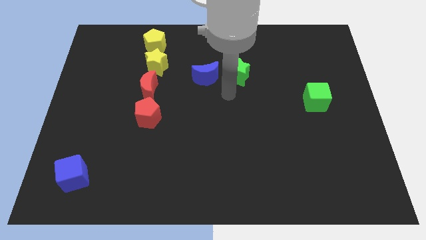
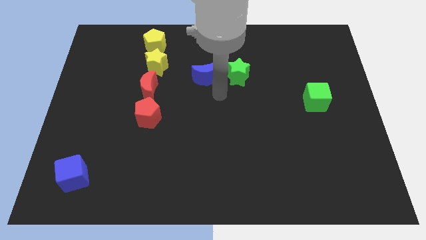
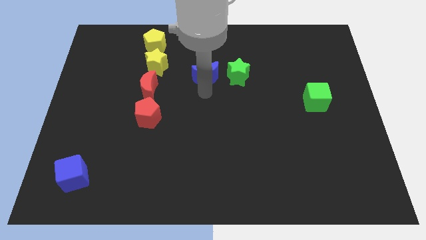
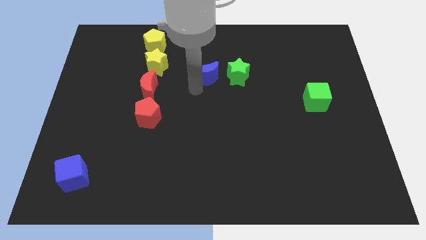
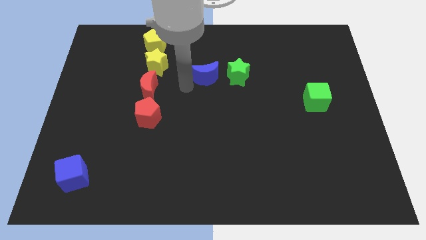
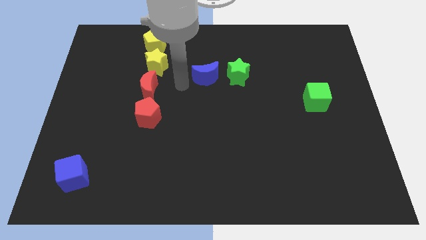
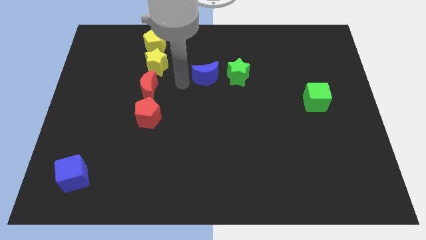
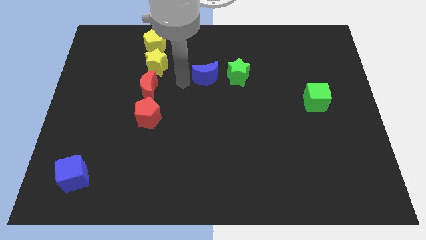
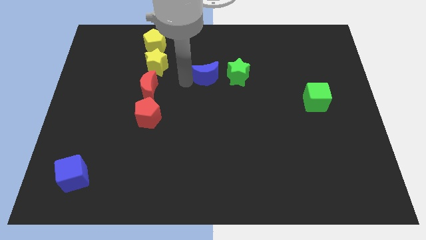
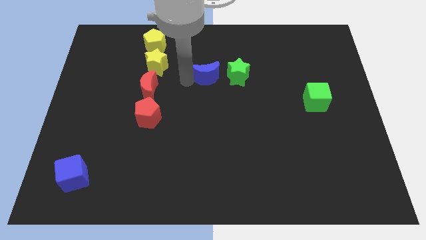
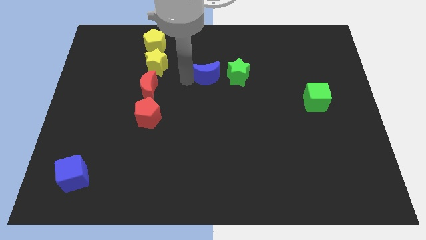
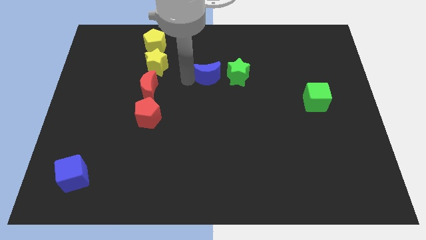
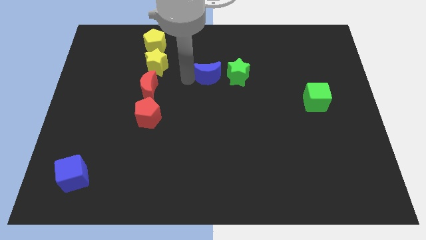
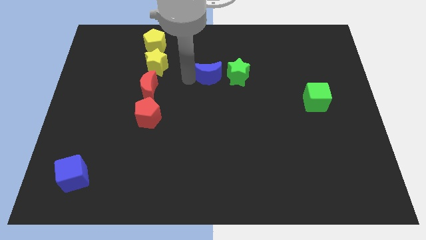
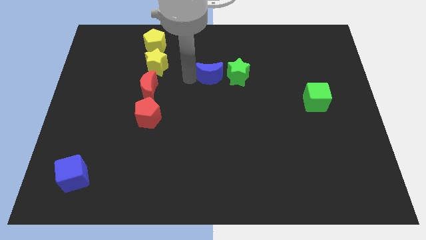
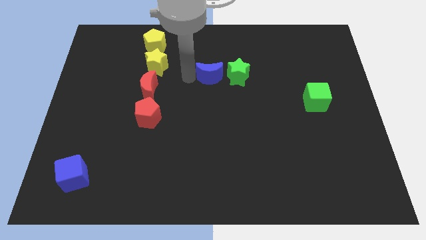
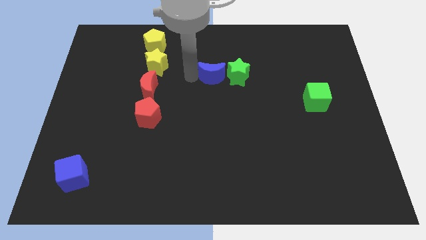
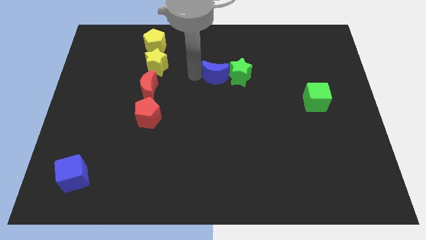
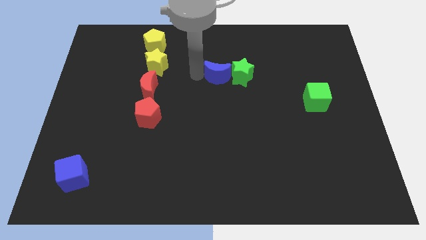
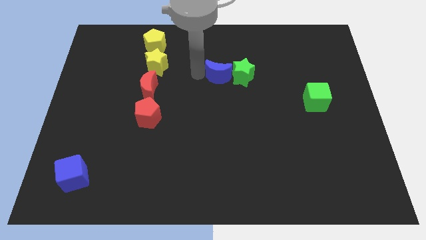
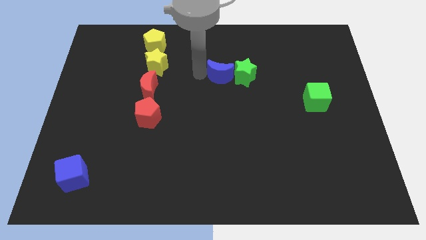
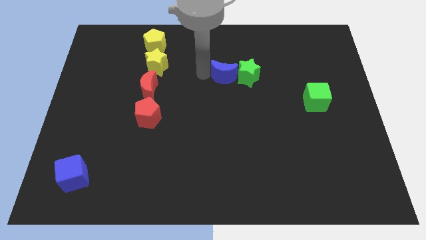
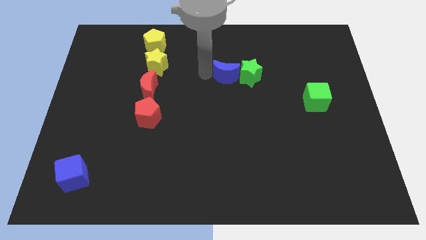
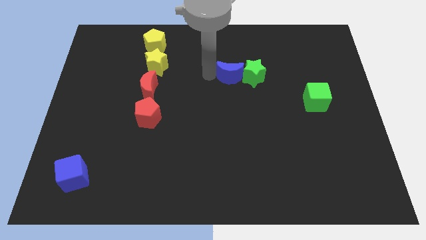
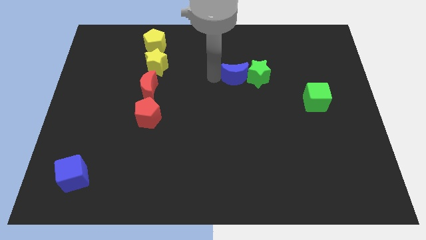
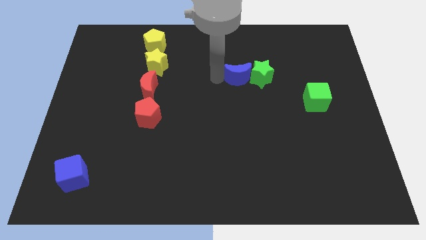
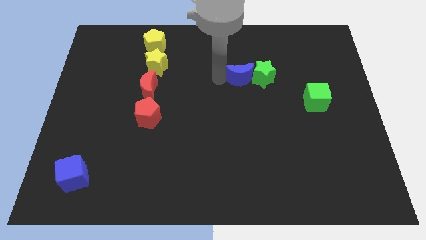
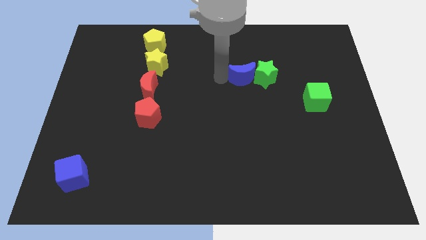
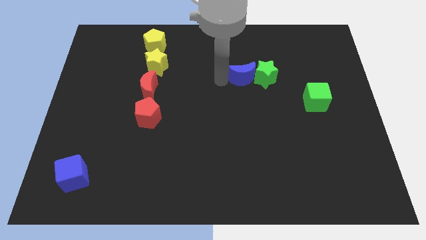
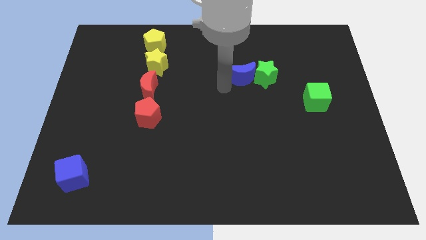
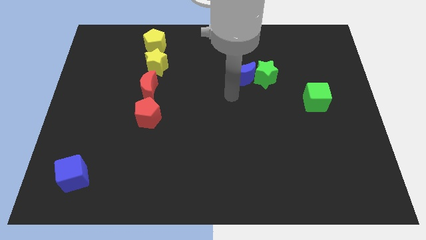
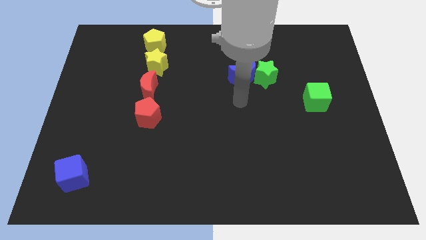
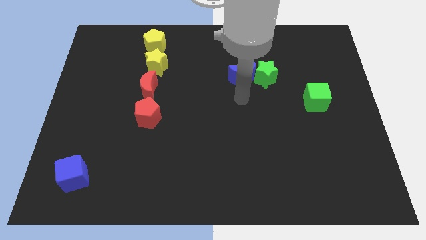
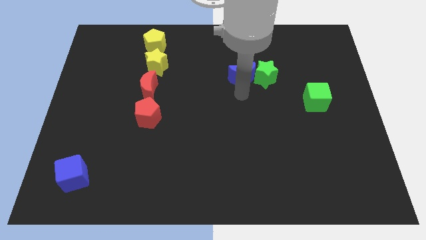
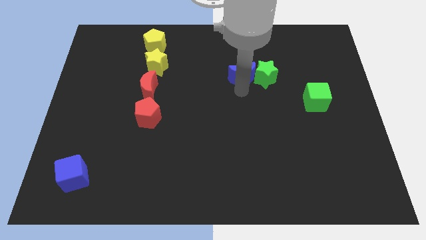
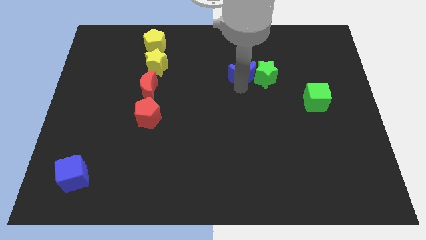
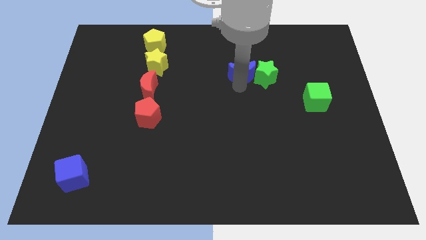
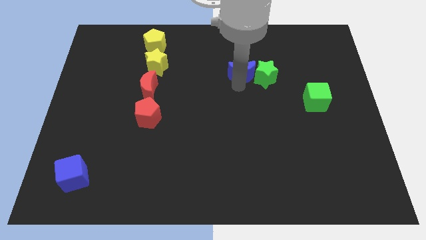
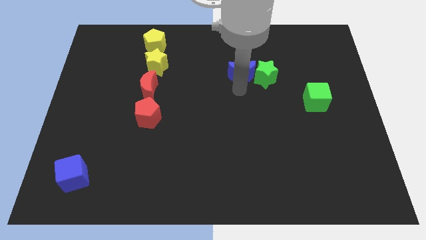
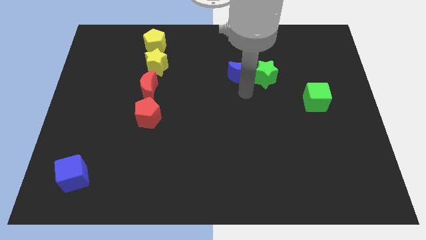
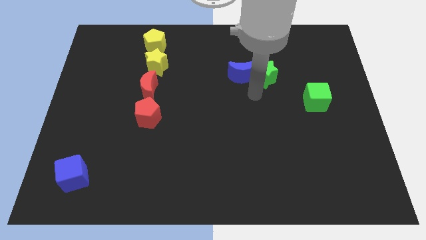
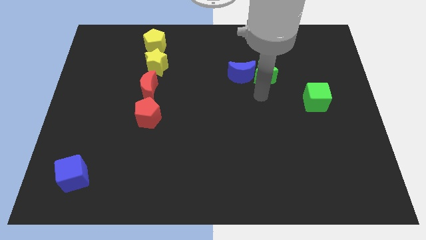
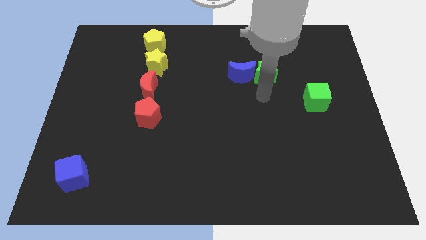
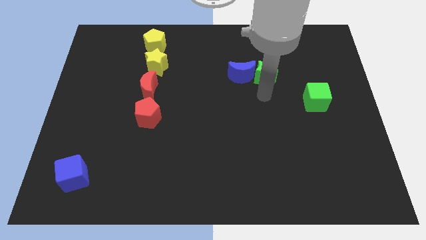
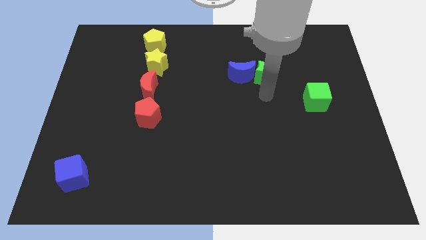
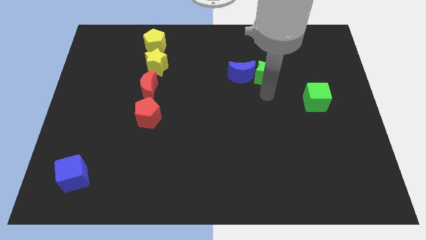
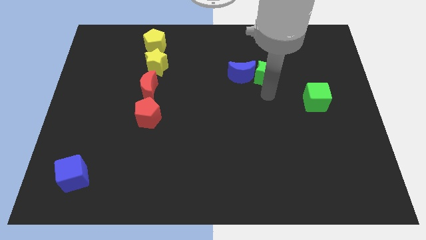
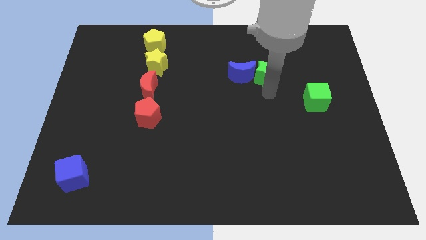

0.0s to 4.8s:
move the blue crescent to the left of the green star

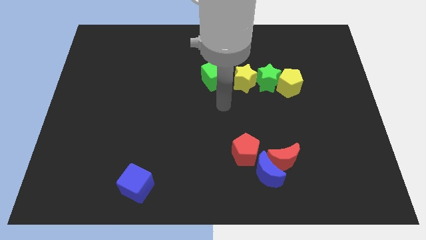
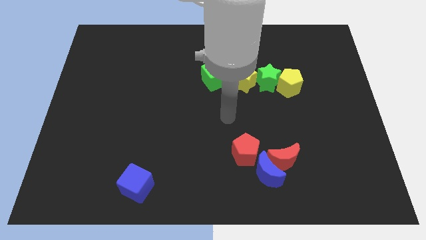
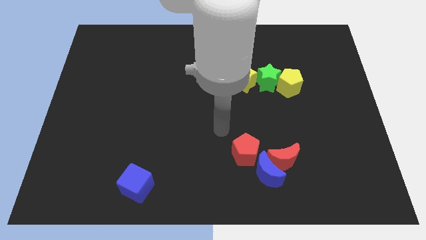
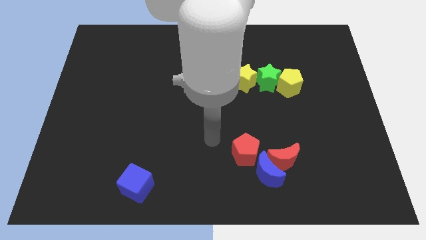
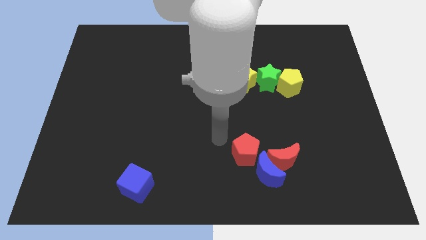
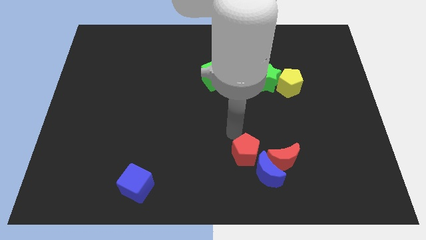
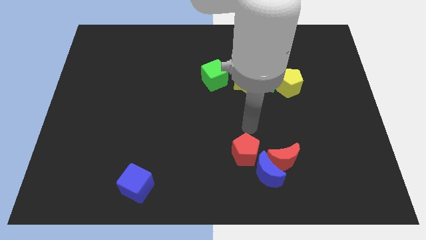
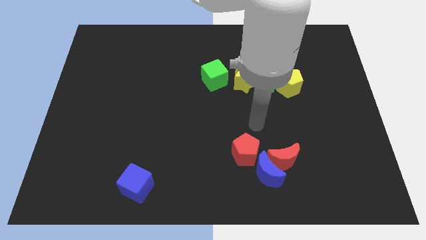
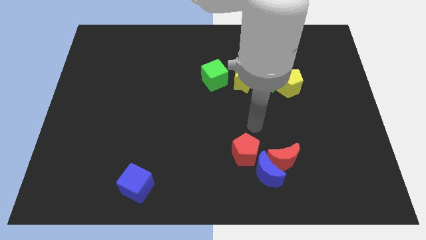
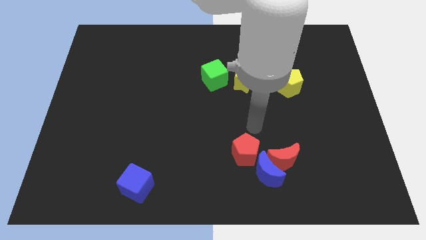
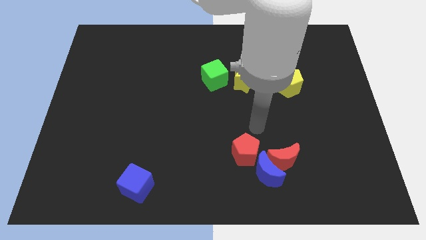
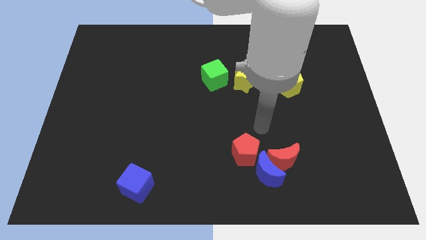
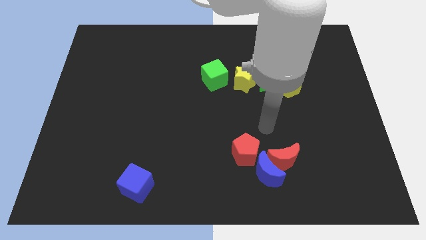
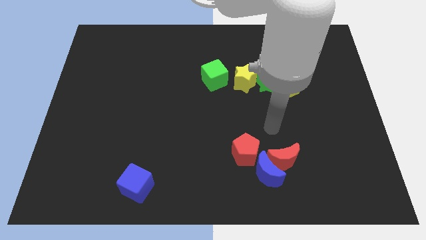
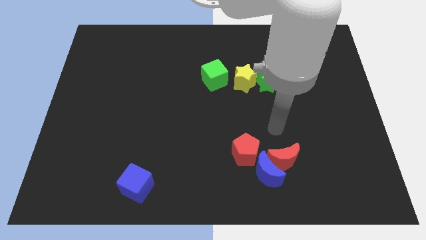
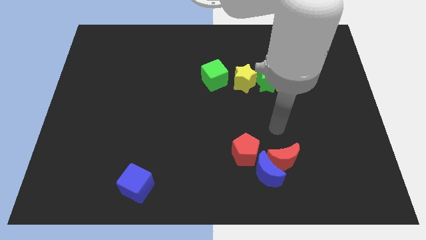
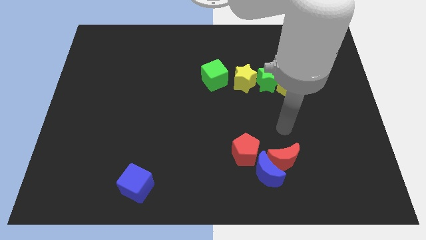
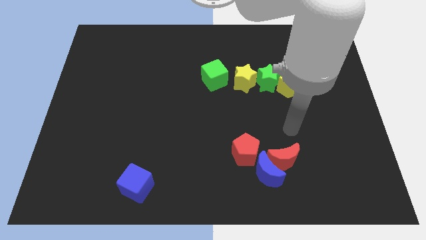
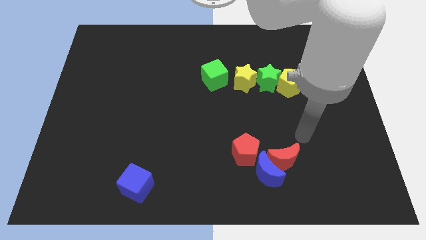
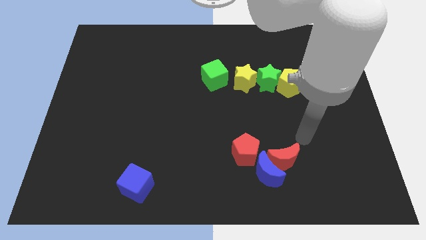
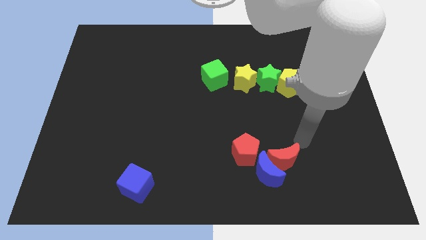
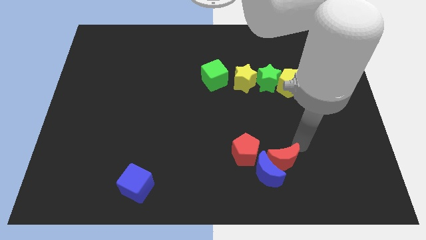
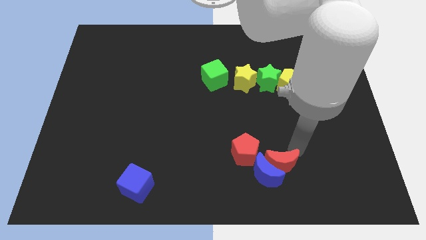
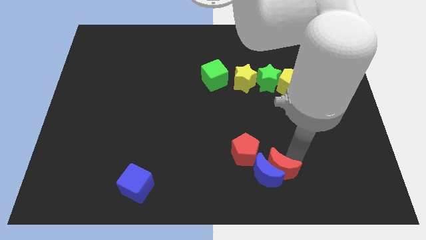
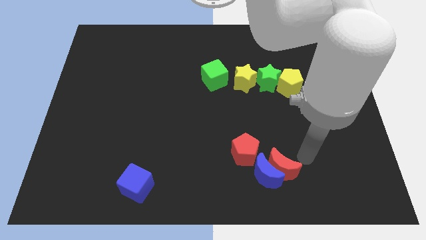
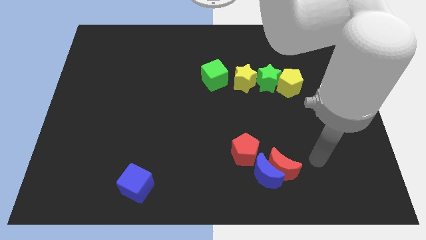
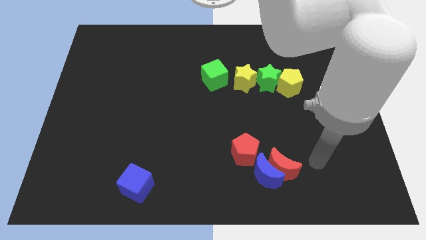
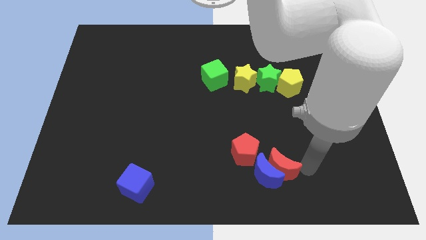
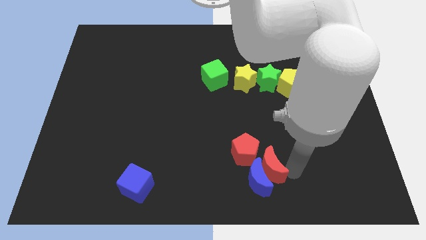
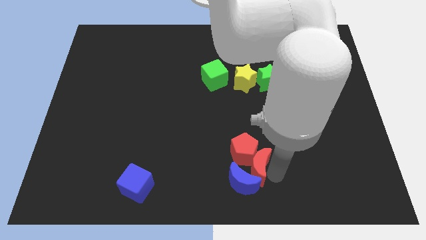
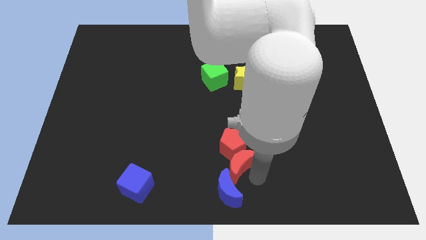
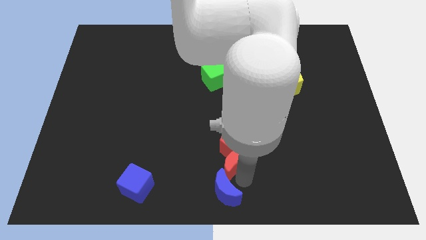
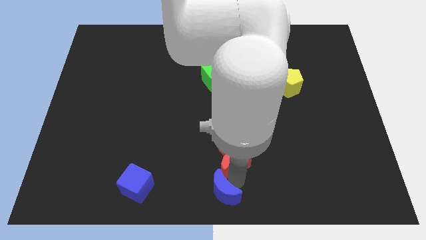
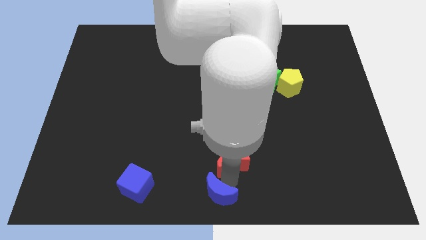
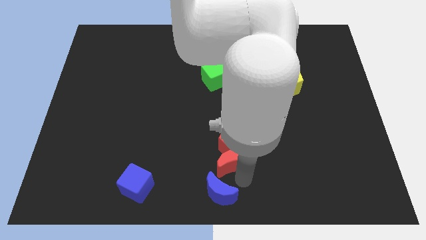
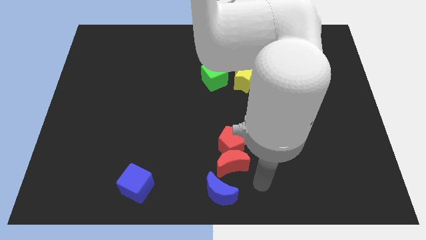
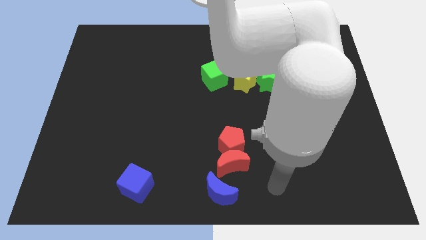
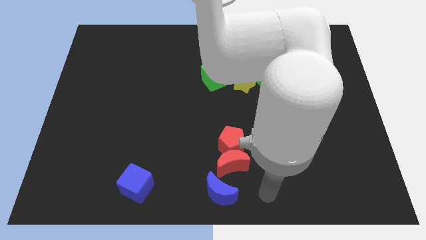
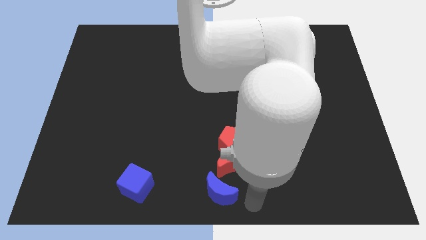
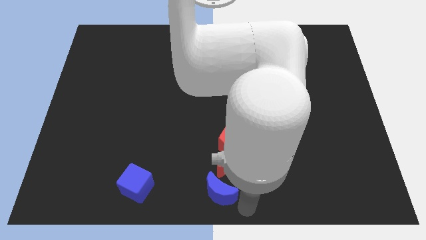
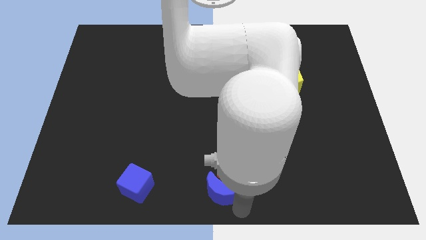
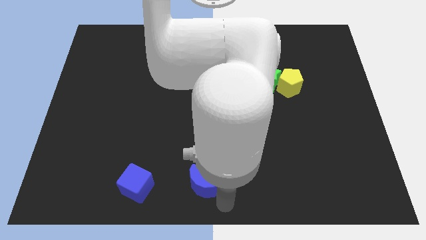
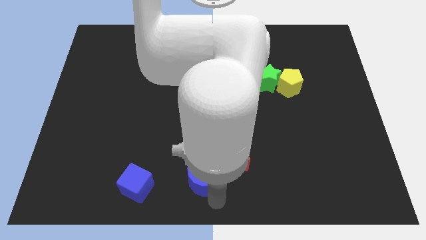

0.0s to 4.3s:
push red and blue moon towards the center of the board
